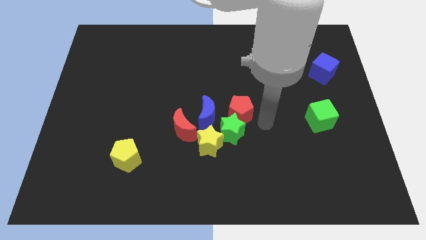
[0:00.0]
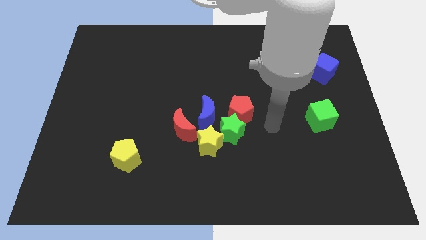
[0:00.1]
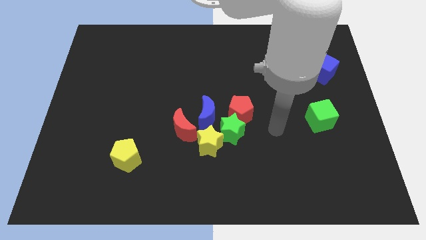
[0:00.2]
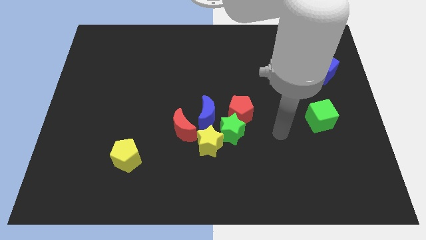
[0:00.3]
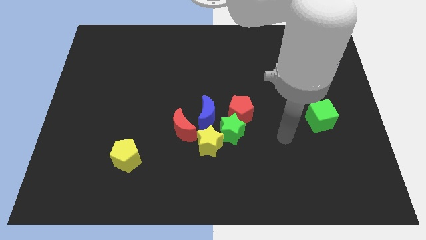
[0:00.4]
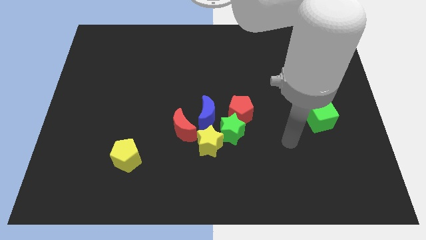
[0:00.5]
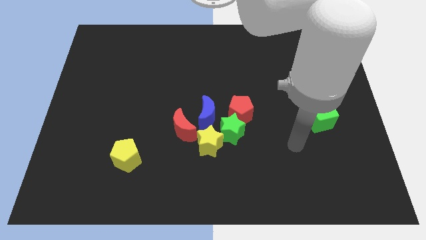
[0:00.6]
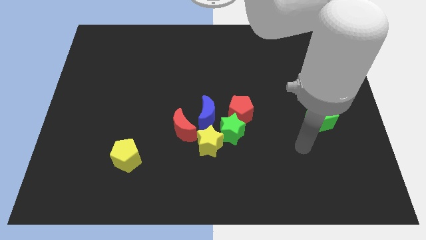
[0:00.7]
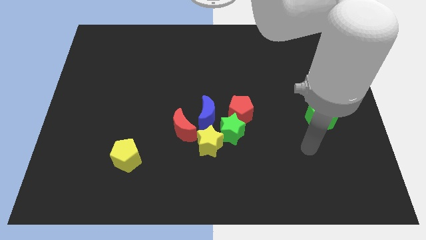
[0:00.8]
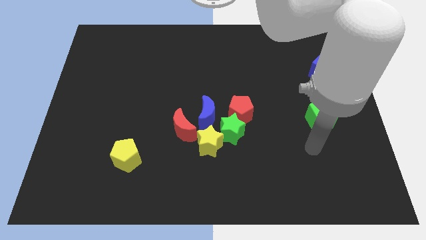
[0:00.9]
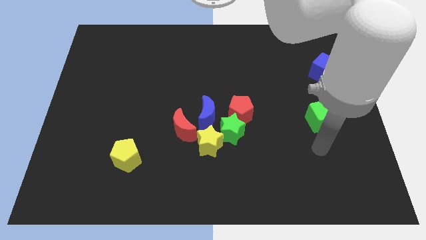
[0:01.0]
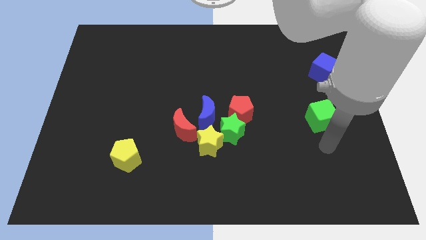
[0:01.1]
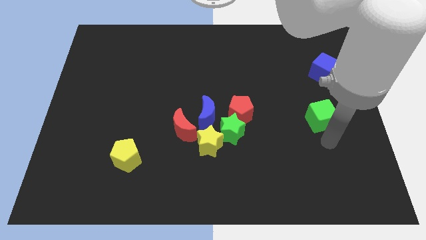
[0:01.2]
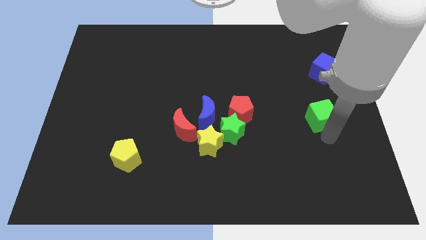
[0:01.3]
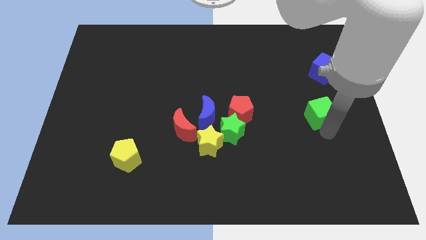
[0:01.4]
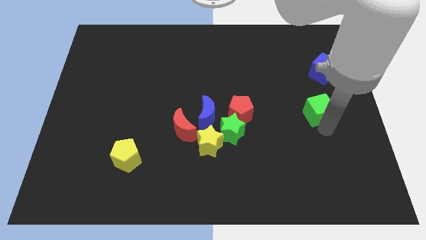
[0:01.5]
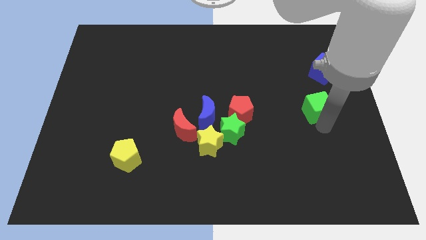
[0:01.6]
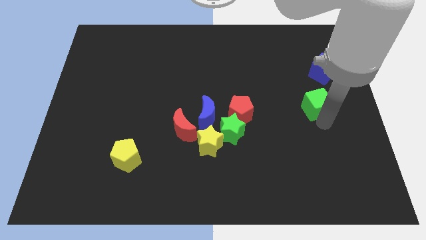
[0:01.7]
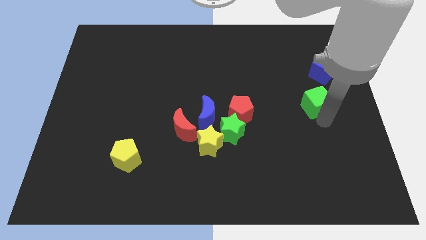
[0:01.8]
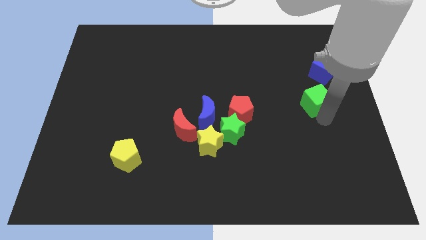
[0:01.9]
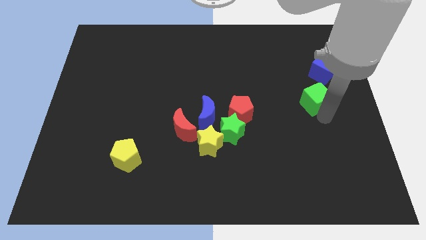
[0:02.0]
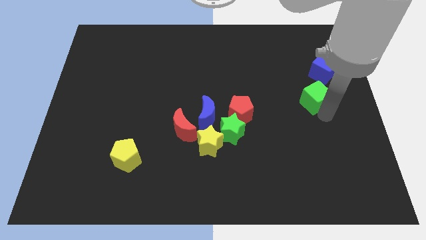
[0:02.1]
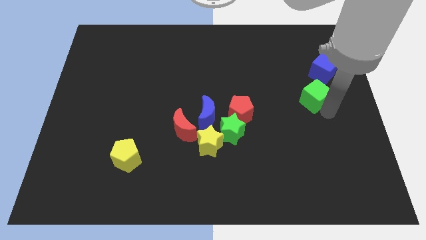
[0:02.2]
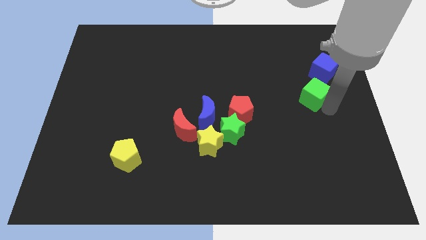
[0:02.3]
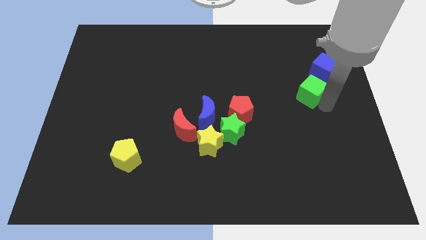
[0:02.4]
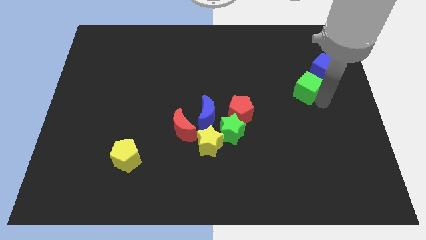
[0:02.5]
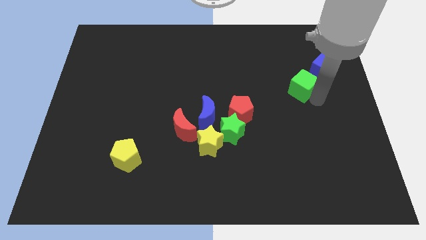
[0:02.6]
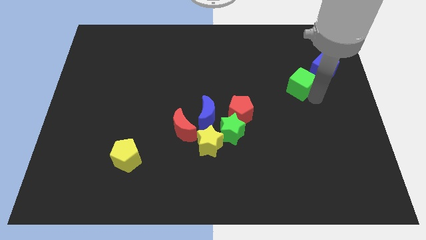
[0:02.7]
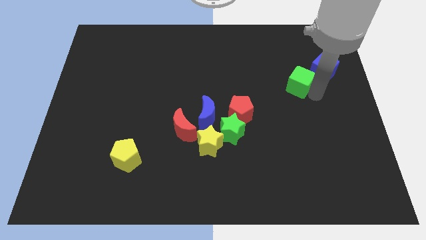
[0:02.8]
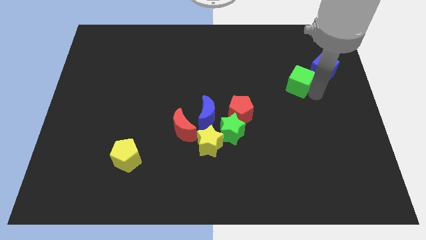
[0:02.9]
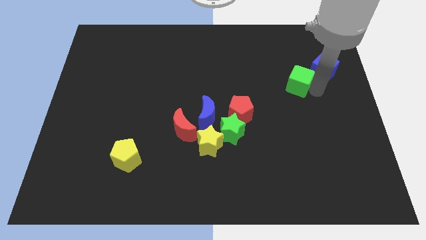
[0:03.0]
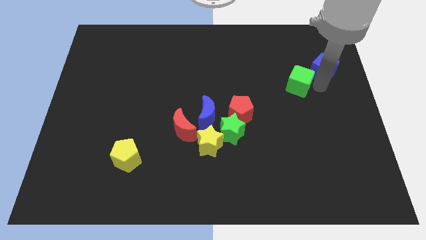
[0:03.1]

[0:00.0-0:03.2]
place the green cube close to the blue cube

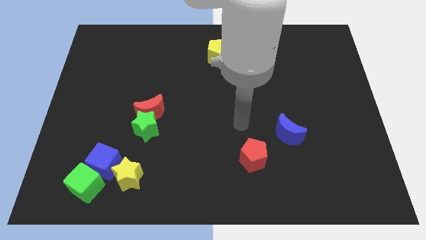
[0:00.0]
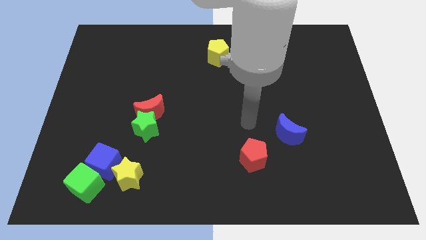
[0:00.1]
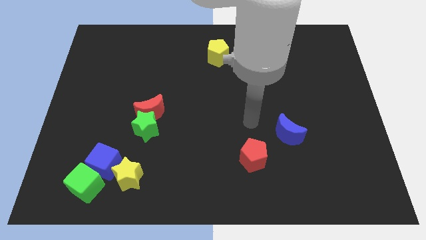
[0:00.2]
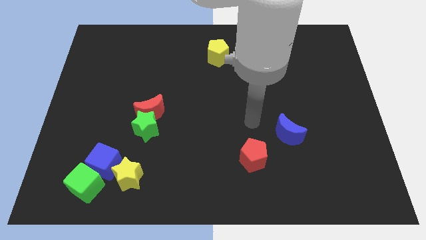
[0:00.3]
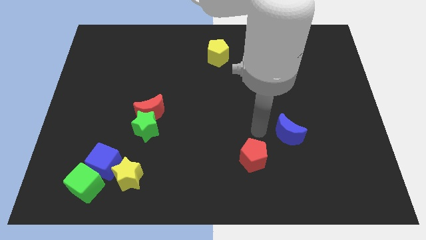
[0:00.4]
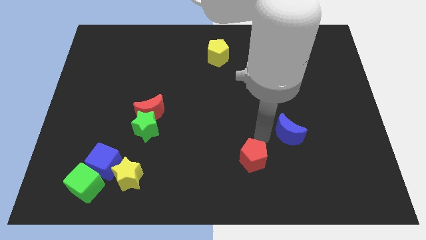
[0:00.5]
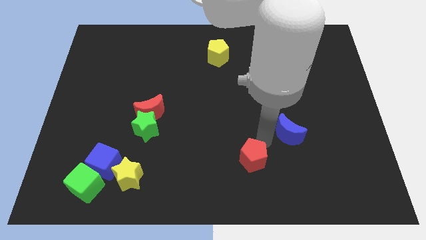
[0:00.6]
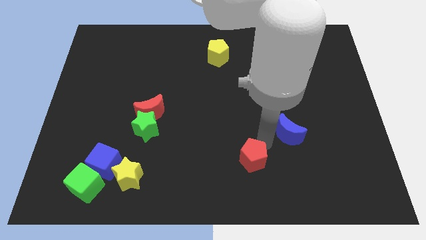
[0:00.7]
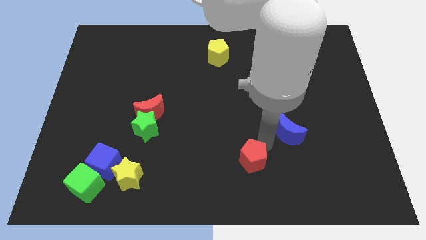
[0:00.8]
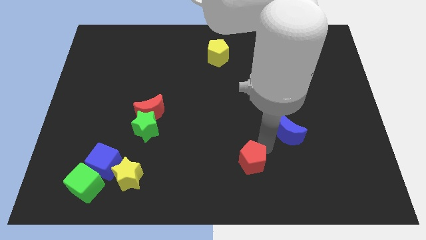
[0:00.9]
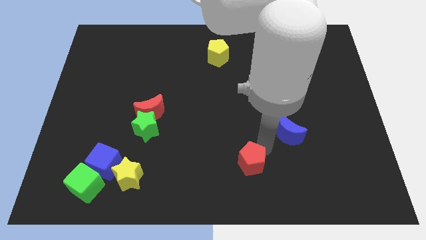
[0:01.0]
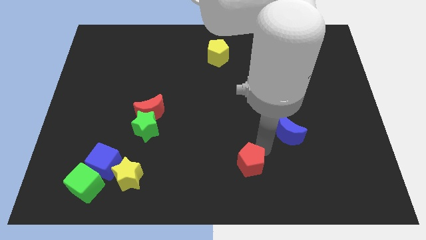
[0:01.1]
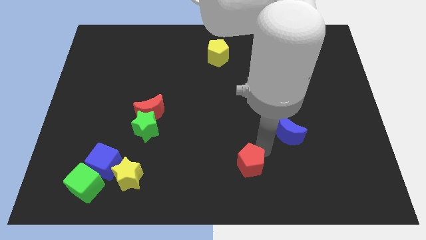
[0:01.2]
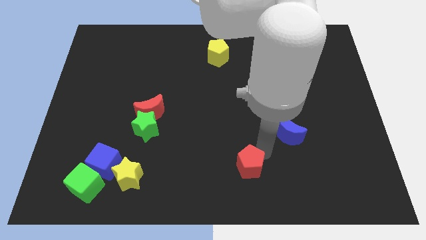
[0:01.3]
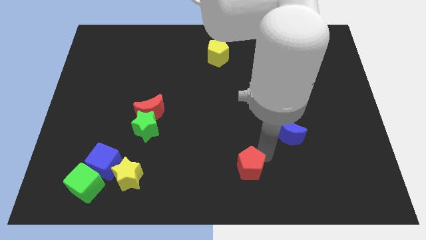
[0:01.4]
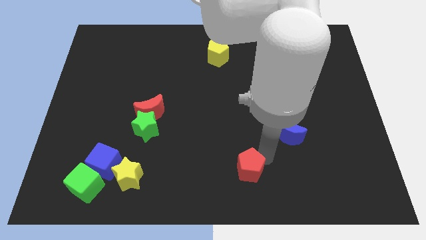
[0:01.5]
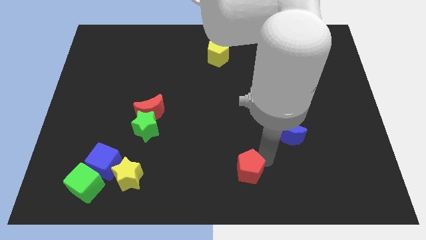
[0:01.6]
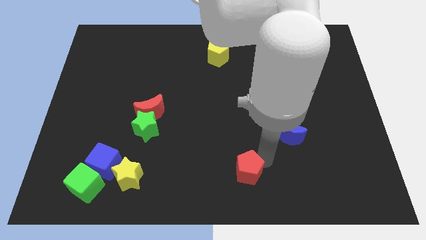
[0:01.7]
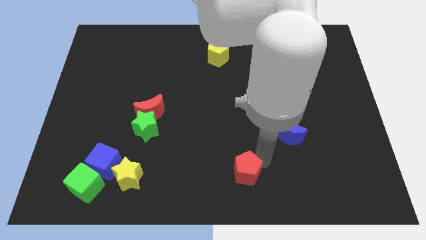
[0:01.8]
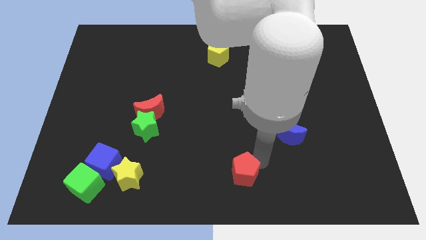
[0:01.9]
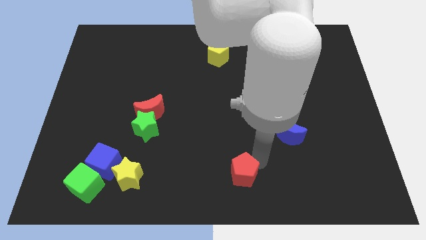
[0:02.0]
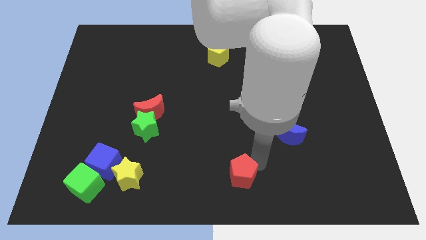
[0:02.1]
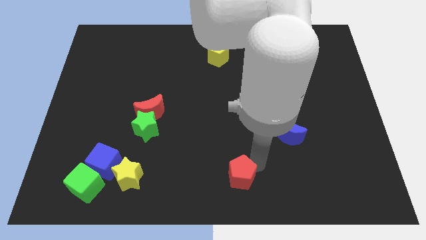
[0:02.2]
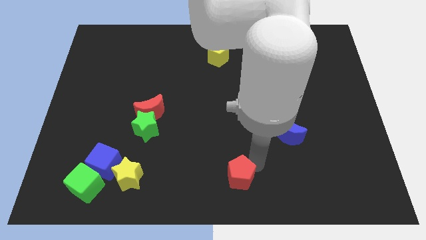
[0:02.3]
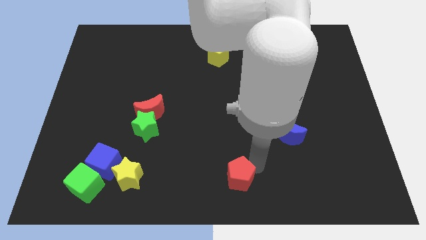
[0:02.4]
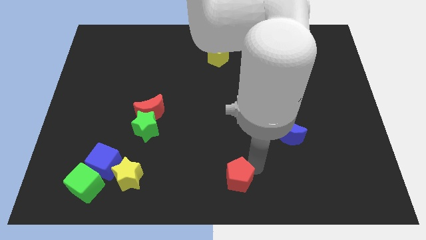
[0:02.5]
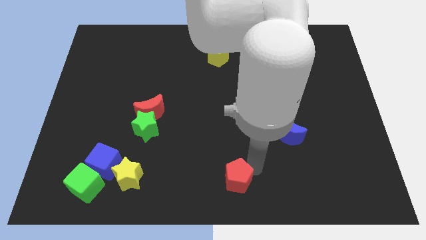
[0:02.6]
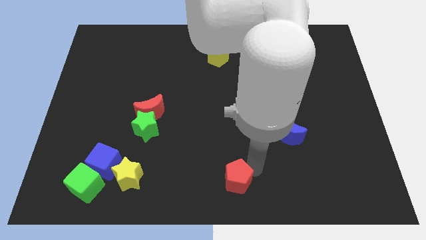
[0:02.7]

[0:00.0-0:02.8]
put the red pentagon horizontally right to the yellow star

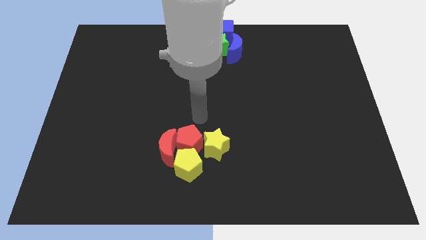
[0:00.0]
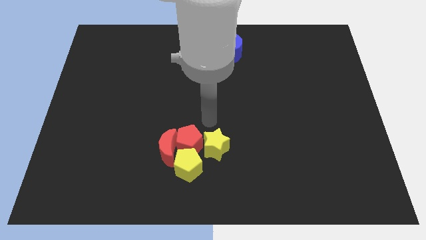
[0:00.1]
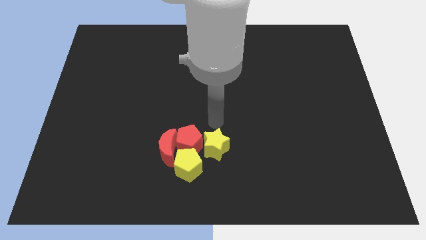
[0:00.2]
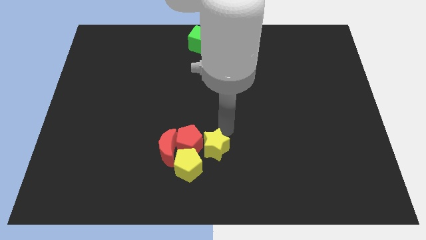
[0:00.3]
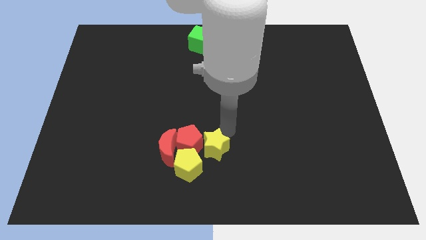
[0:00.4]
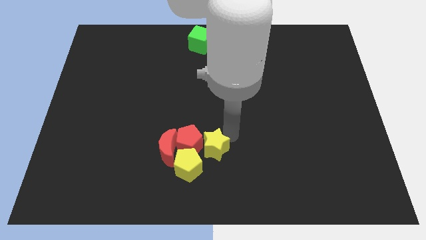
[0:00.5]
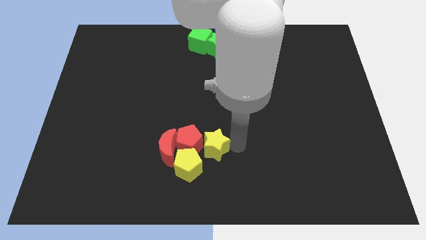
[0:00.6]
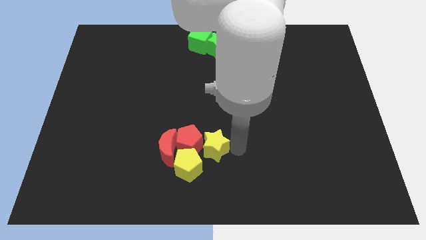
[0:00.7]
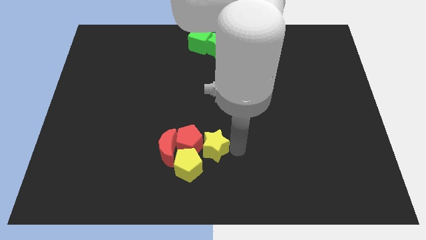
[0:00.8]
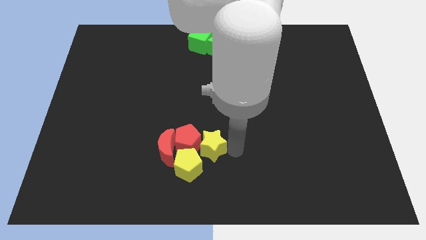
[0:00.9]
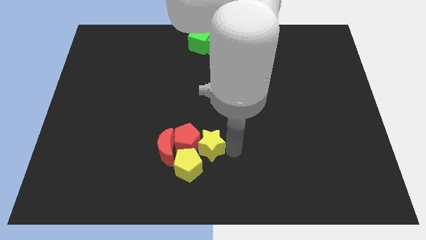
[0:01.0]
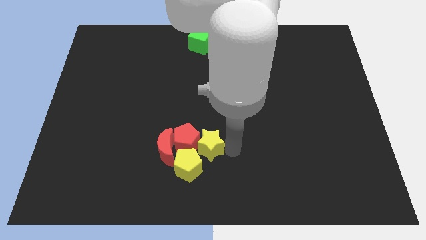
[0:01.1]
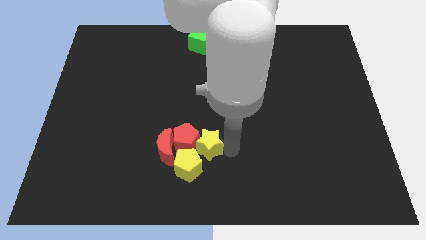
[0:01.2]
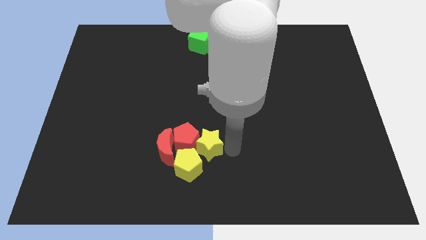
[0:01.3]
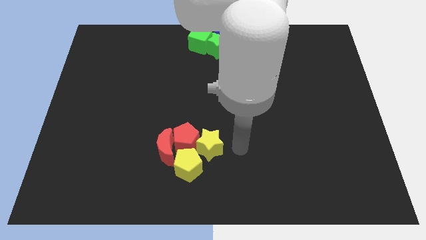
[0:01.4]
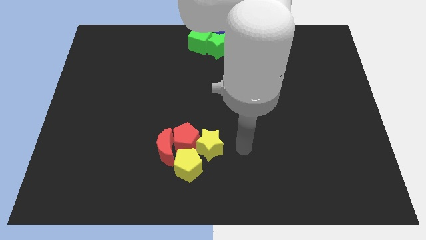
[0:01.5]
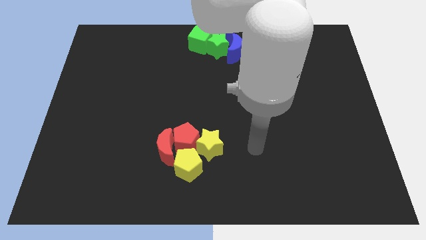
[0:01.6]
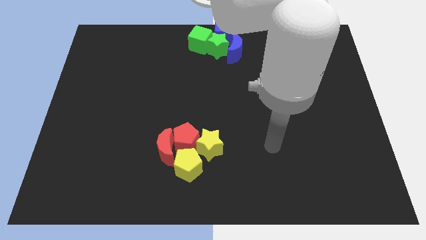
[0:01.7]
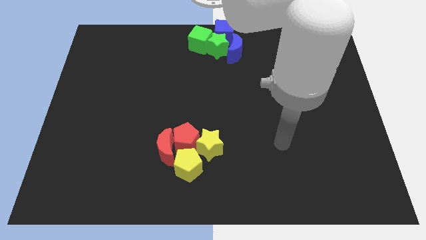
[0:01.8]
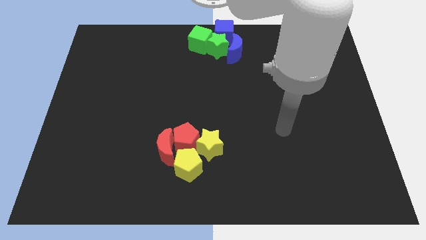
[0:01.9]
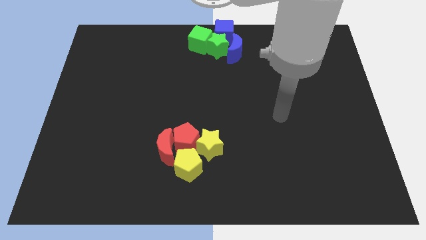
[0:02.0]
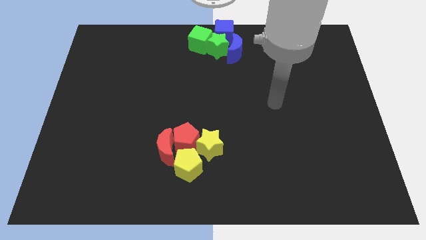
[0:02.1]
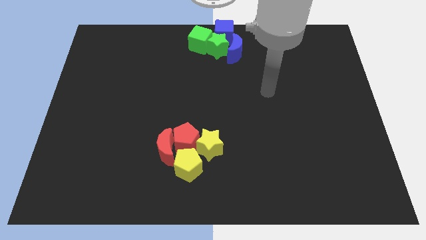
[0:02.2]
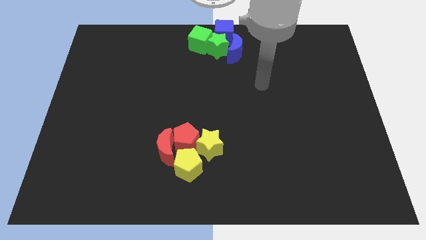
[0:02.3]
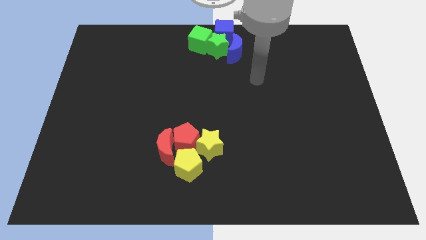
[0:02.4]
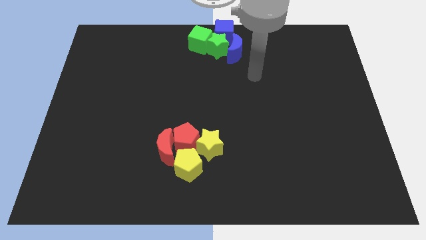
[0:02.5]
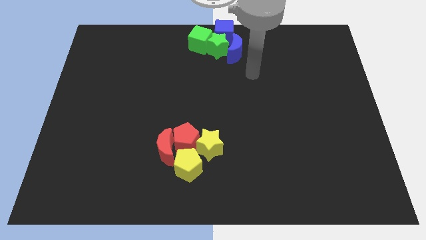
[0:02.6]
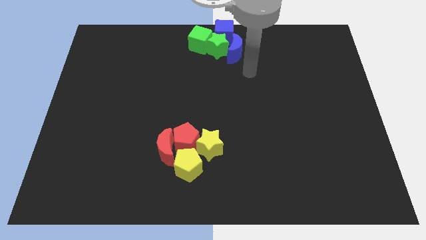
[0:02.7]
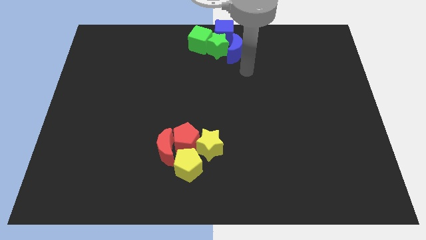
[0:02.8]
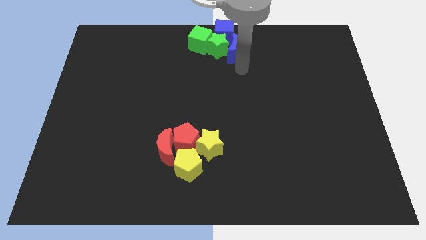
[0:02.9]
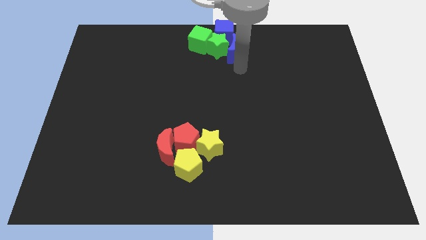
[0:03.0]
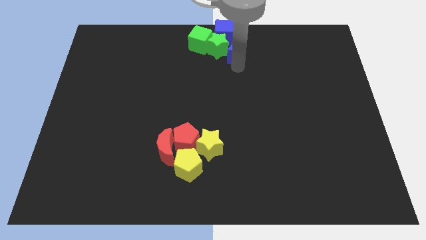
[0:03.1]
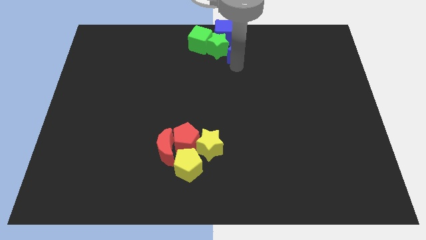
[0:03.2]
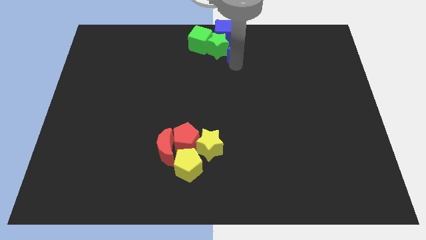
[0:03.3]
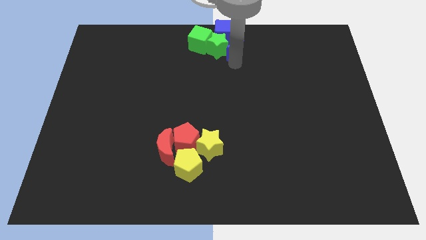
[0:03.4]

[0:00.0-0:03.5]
move your hand towards the blue moon
